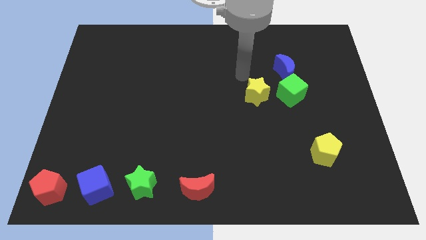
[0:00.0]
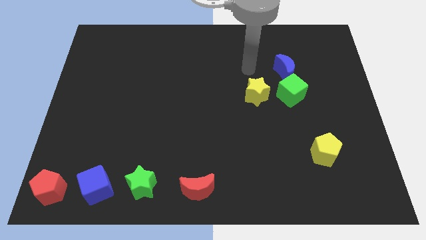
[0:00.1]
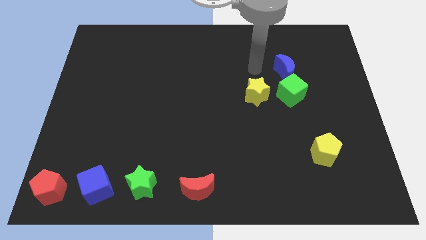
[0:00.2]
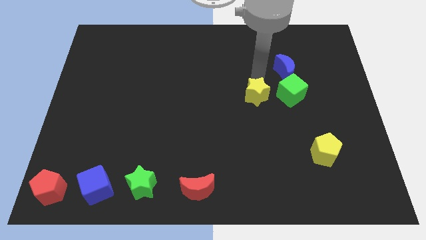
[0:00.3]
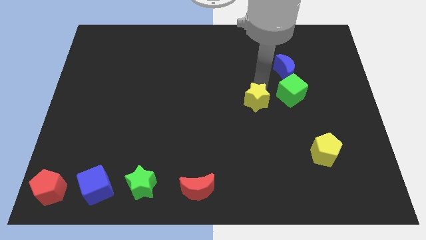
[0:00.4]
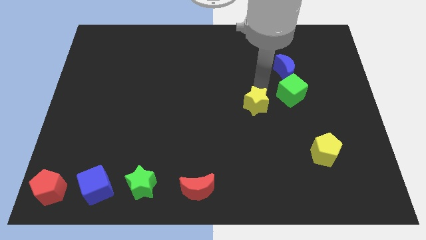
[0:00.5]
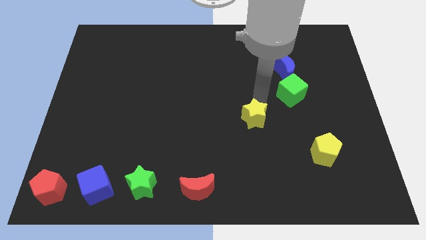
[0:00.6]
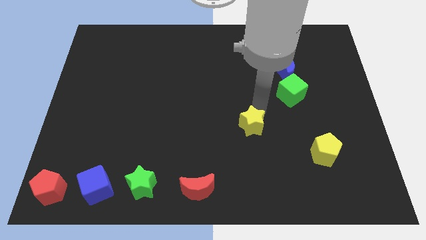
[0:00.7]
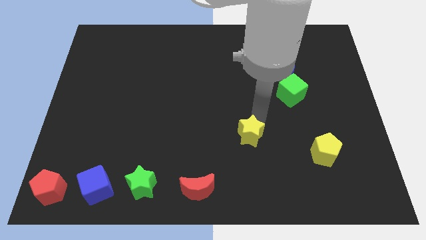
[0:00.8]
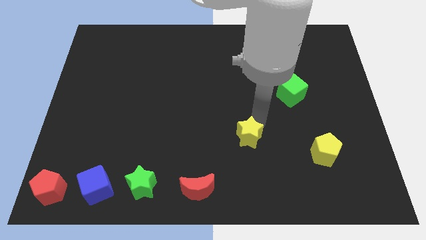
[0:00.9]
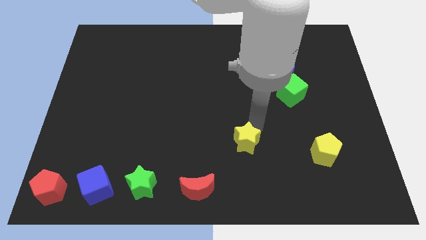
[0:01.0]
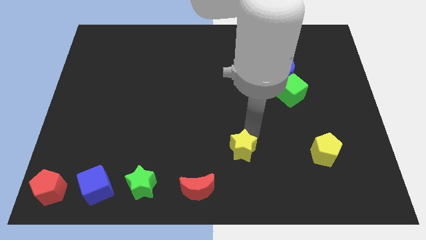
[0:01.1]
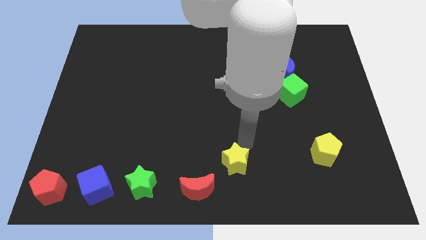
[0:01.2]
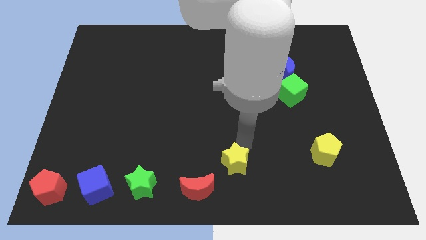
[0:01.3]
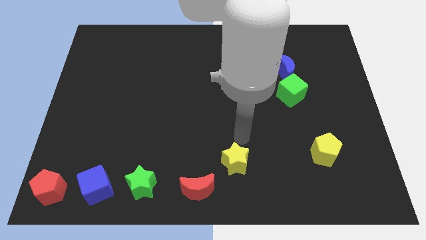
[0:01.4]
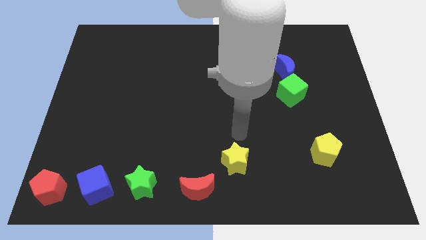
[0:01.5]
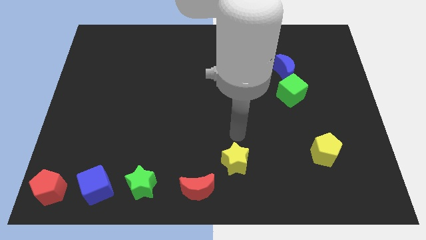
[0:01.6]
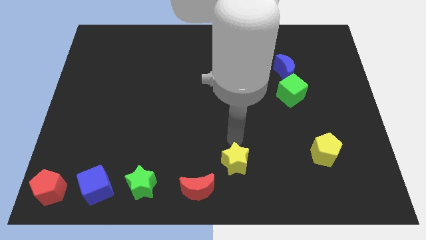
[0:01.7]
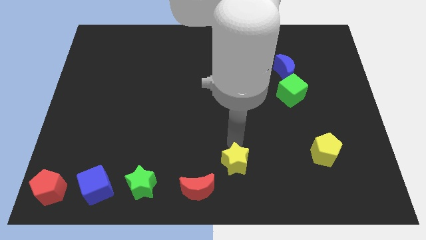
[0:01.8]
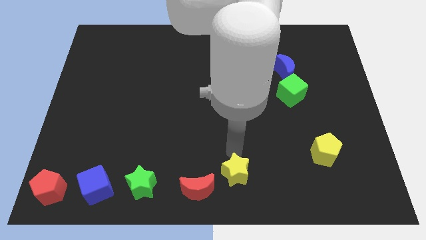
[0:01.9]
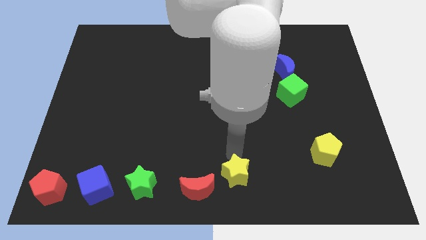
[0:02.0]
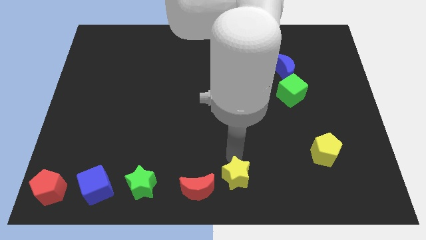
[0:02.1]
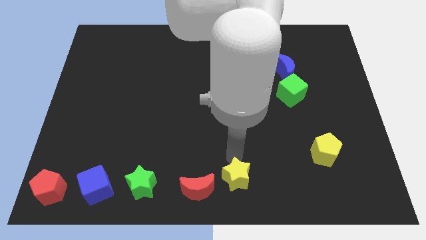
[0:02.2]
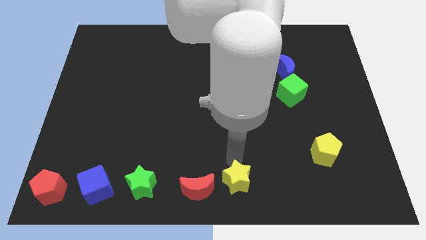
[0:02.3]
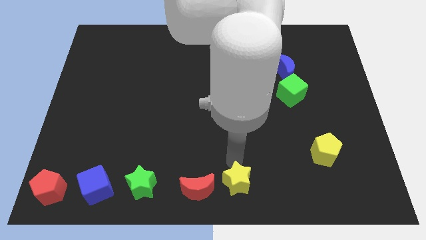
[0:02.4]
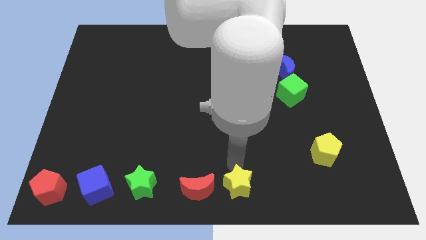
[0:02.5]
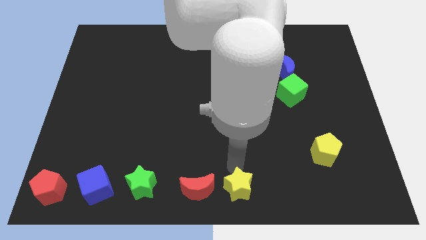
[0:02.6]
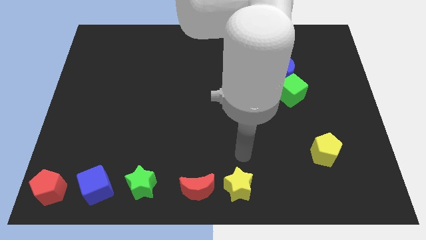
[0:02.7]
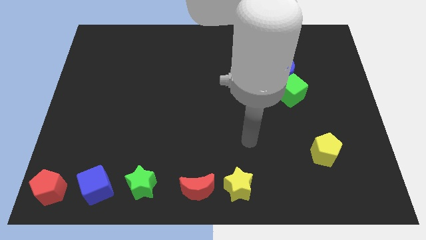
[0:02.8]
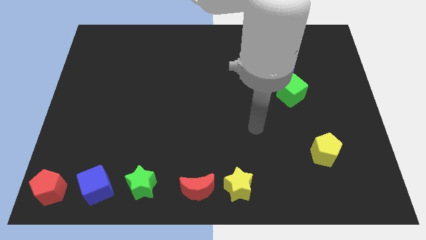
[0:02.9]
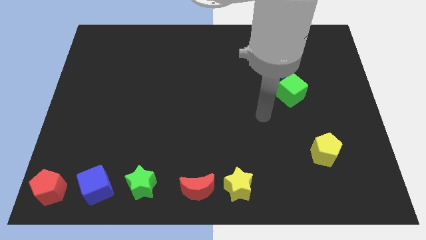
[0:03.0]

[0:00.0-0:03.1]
place yellow star to right of red crescent

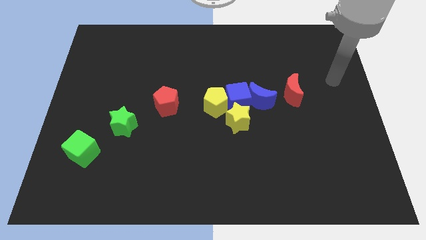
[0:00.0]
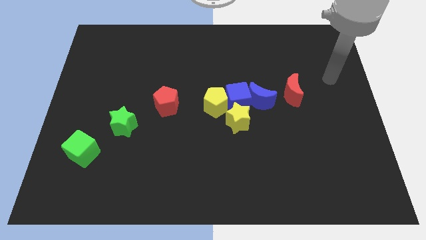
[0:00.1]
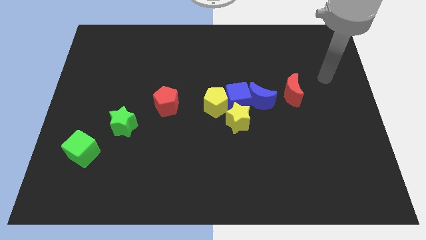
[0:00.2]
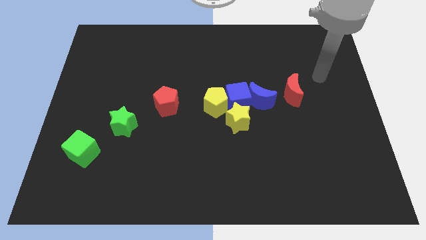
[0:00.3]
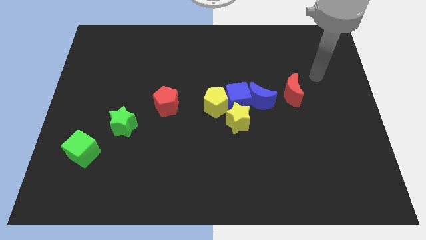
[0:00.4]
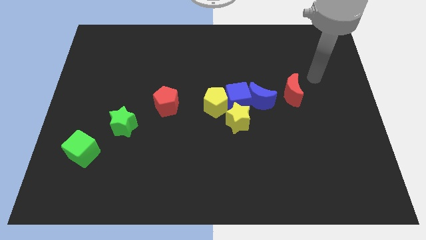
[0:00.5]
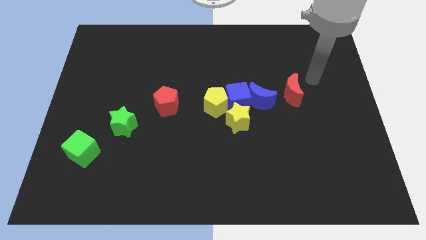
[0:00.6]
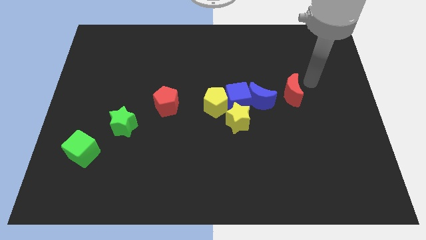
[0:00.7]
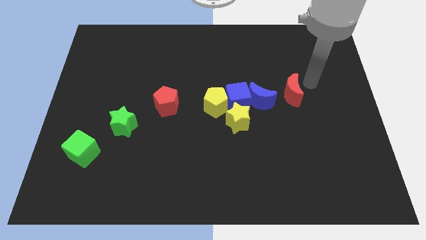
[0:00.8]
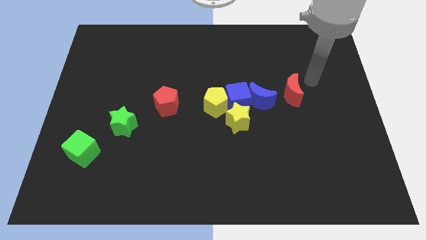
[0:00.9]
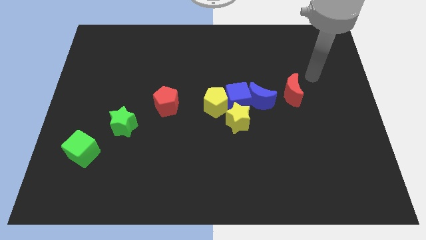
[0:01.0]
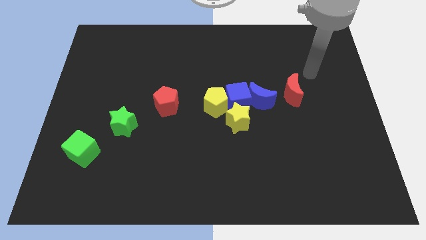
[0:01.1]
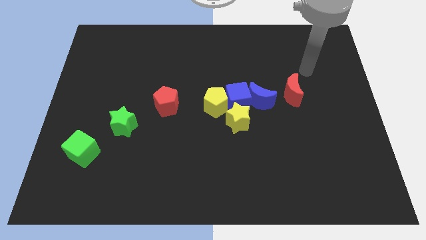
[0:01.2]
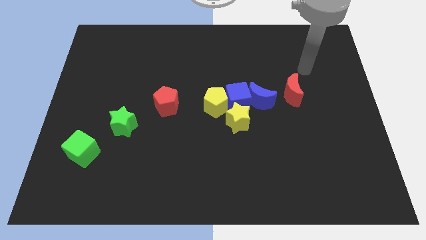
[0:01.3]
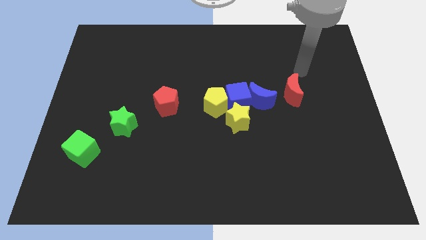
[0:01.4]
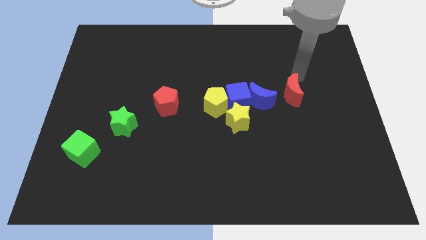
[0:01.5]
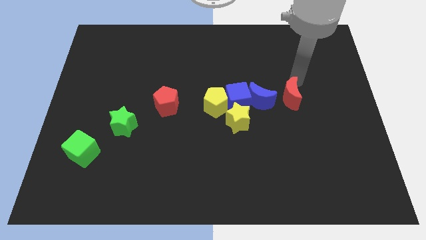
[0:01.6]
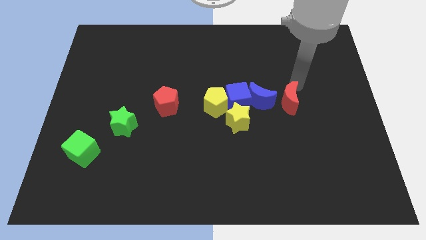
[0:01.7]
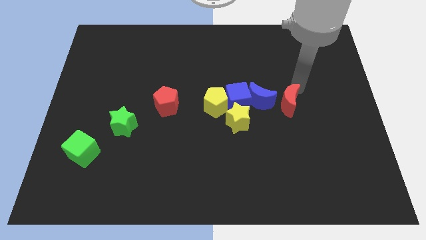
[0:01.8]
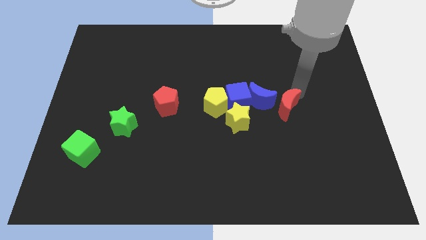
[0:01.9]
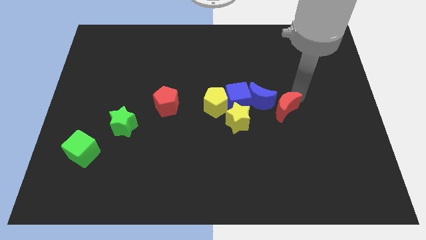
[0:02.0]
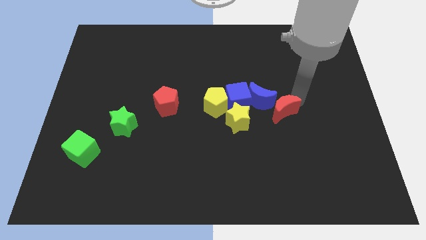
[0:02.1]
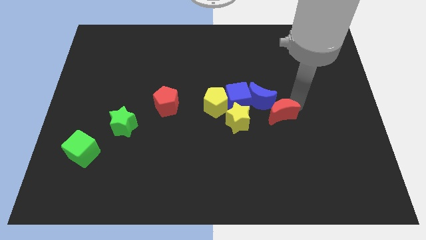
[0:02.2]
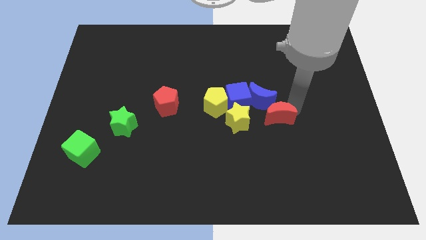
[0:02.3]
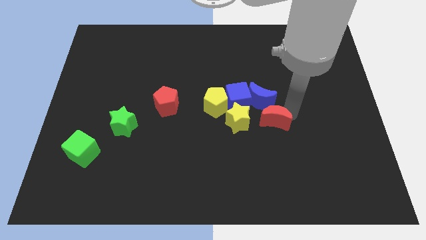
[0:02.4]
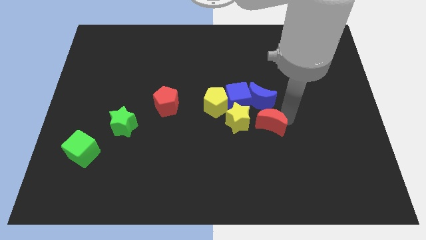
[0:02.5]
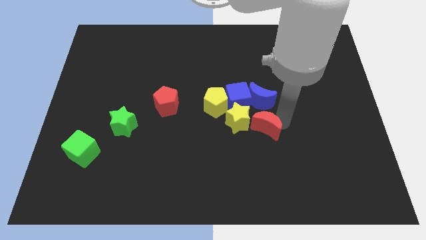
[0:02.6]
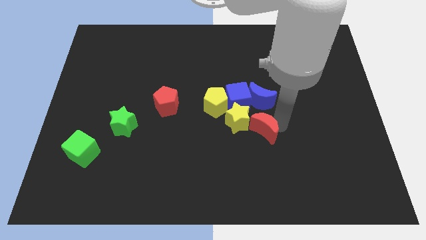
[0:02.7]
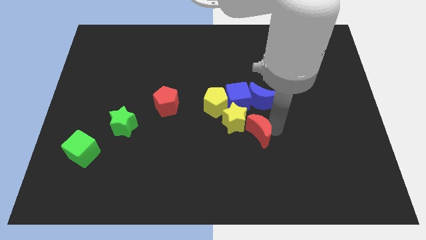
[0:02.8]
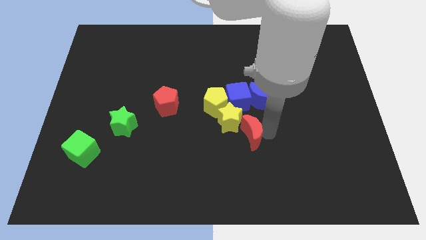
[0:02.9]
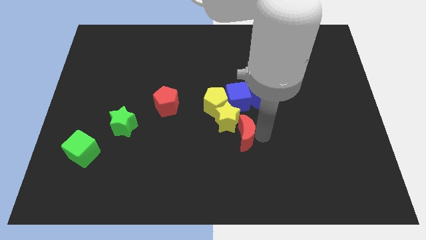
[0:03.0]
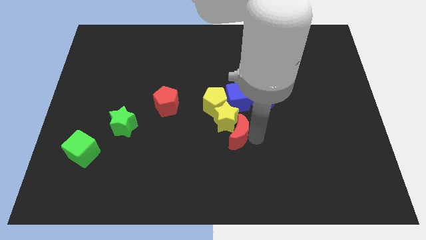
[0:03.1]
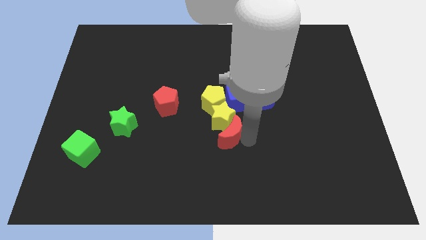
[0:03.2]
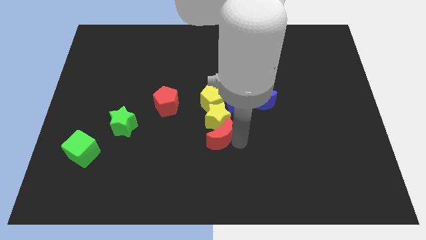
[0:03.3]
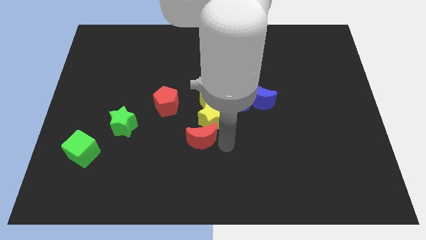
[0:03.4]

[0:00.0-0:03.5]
push the red crescent into the yellow star

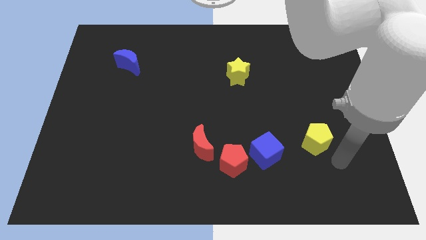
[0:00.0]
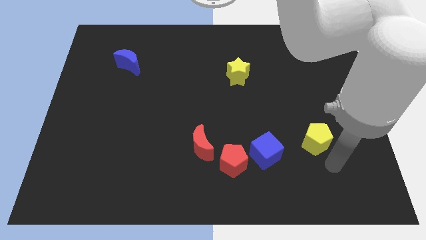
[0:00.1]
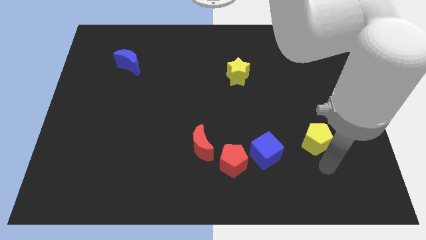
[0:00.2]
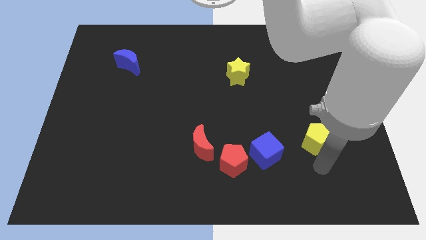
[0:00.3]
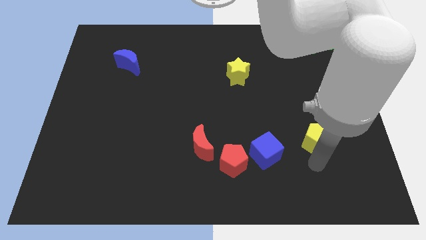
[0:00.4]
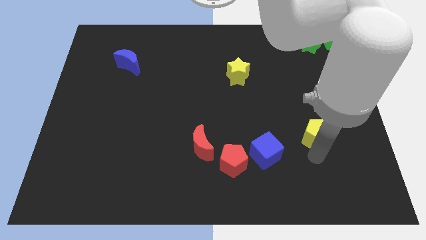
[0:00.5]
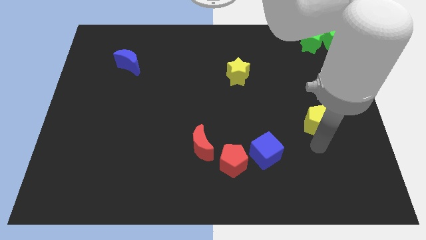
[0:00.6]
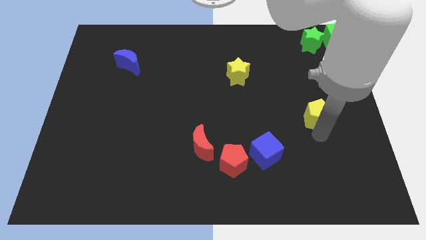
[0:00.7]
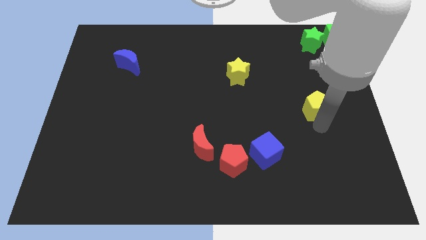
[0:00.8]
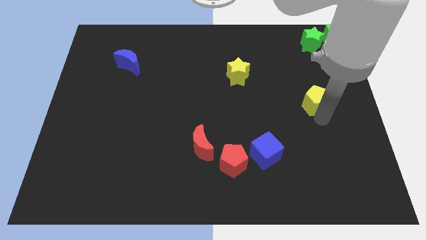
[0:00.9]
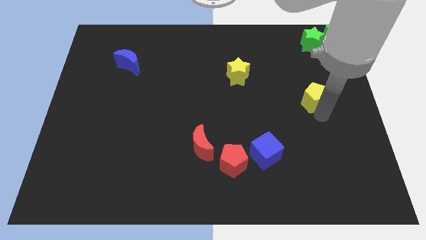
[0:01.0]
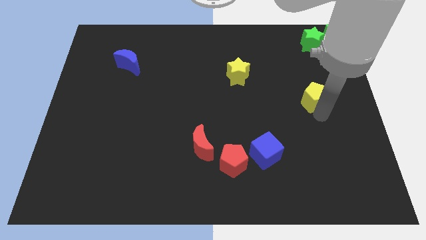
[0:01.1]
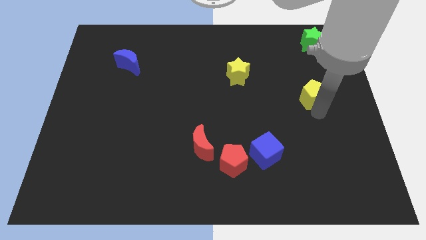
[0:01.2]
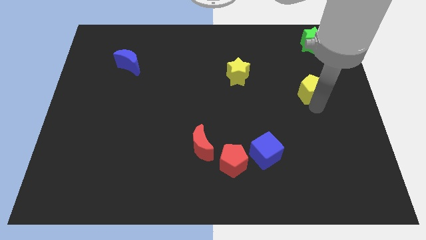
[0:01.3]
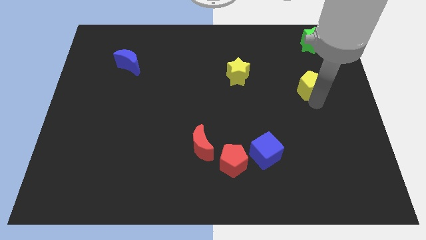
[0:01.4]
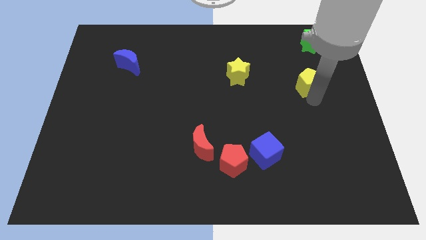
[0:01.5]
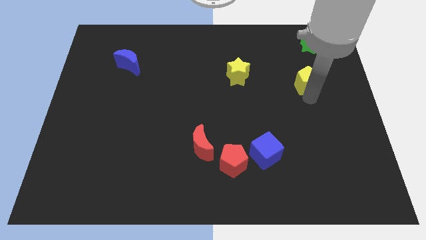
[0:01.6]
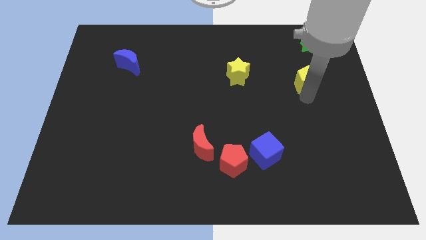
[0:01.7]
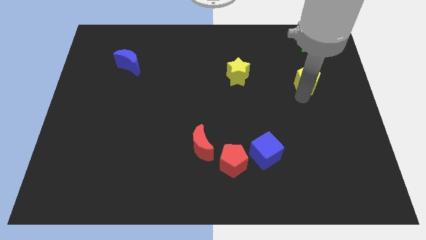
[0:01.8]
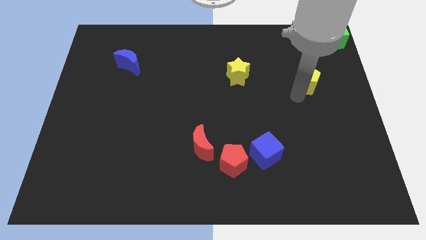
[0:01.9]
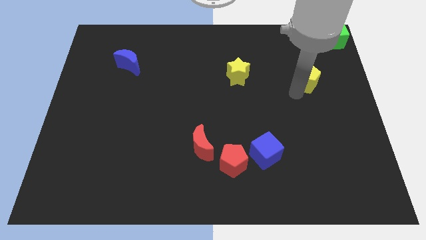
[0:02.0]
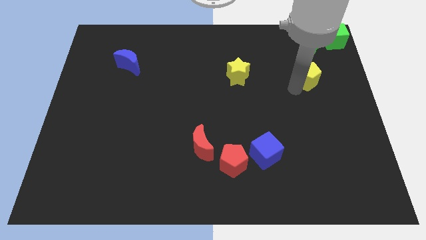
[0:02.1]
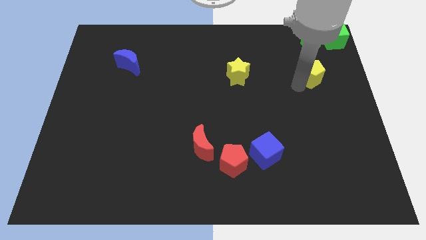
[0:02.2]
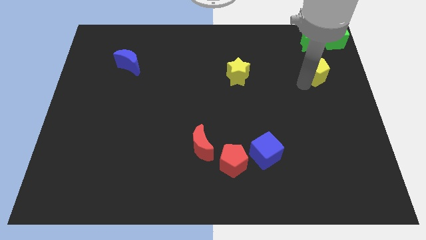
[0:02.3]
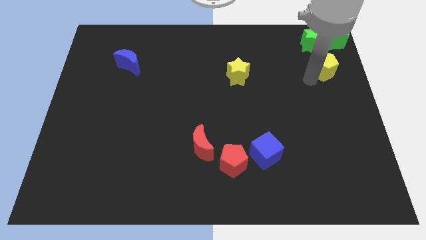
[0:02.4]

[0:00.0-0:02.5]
move the yellow pentagon to the horizontal right side of the yellow star
